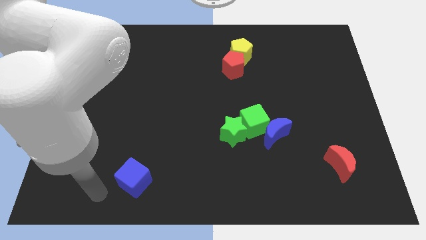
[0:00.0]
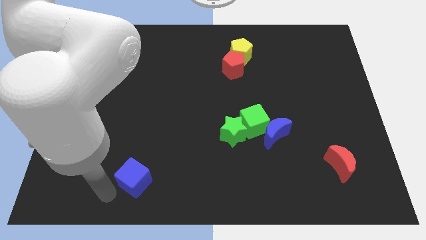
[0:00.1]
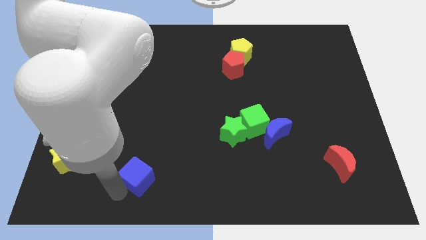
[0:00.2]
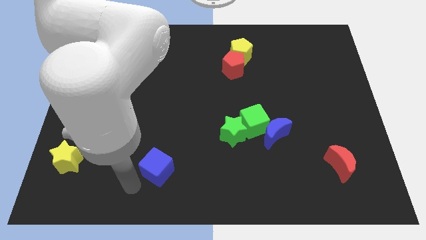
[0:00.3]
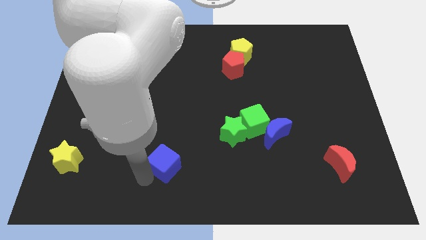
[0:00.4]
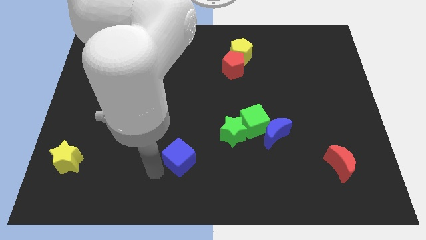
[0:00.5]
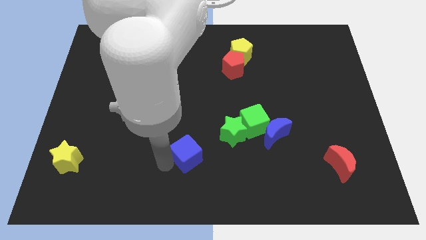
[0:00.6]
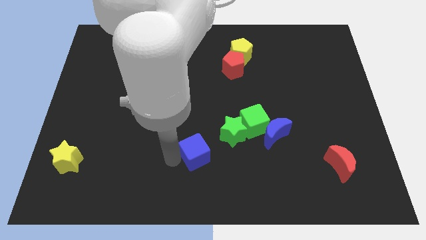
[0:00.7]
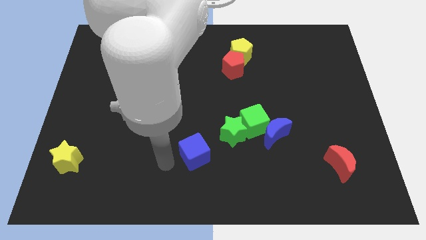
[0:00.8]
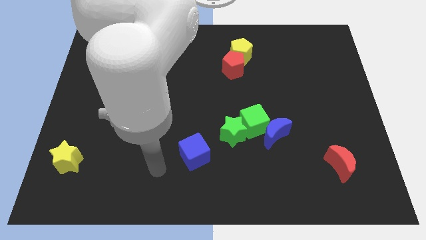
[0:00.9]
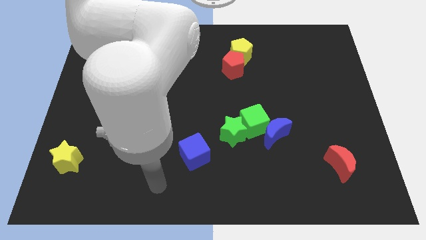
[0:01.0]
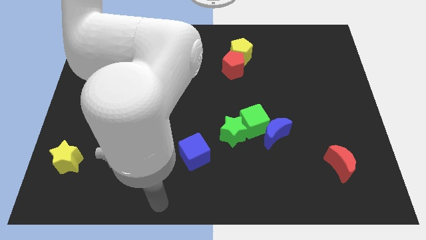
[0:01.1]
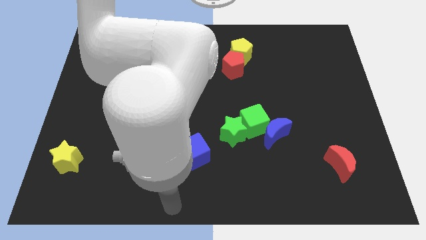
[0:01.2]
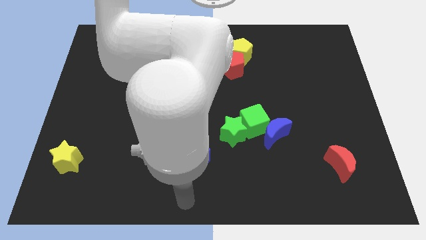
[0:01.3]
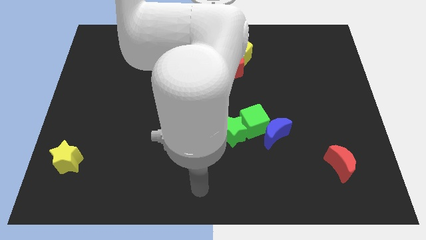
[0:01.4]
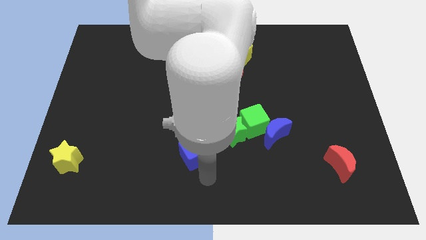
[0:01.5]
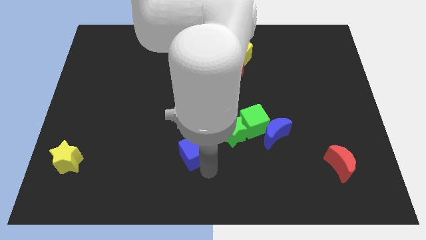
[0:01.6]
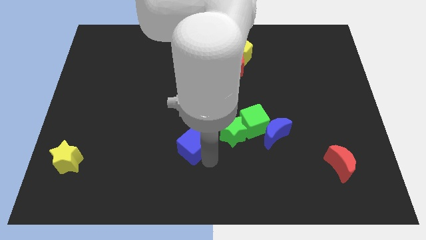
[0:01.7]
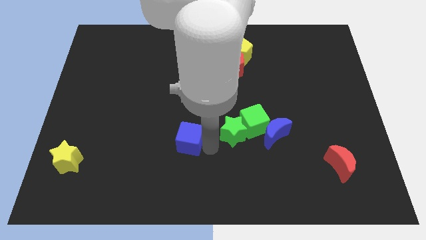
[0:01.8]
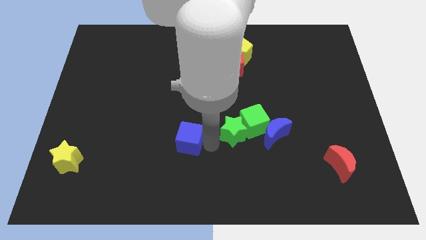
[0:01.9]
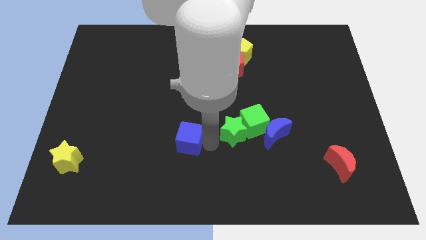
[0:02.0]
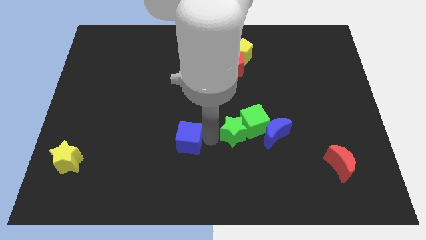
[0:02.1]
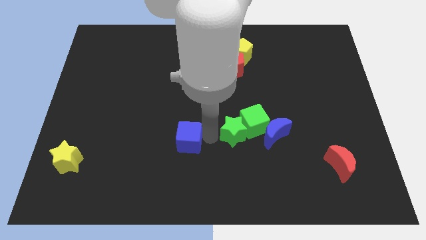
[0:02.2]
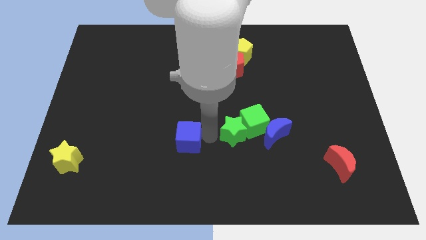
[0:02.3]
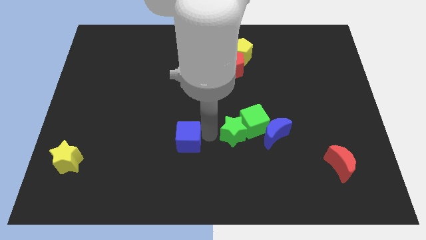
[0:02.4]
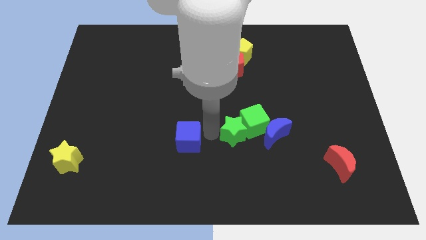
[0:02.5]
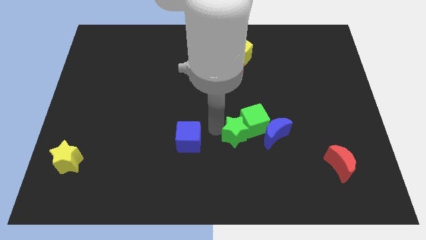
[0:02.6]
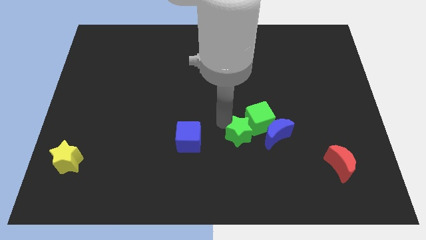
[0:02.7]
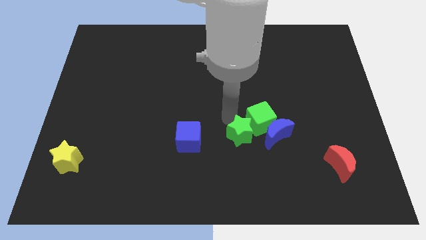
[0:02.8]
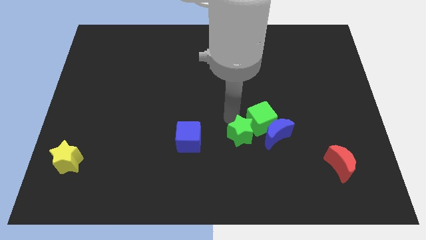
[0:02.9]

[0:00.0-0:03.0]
place the blue cube to the left of green star

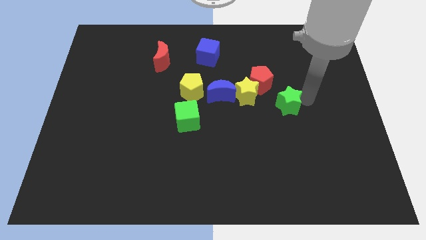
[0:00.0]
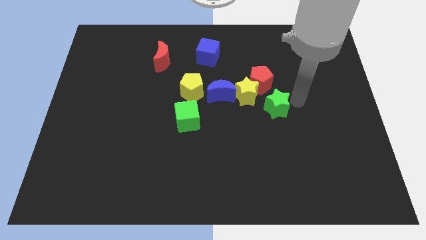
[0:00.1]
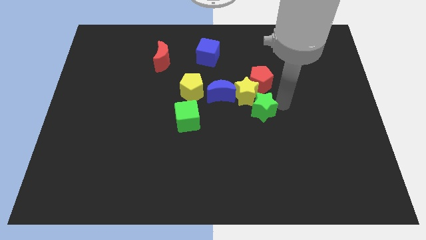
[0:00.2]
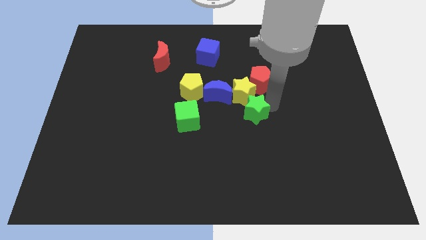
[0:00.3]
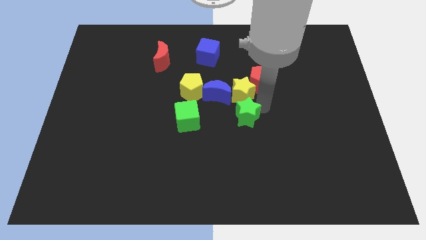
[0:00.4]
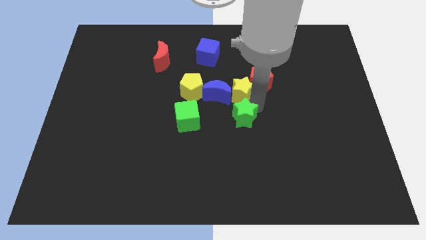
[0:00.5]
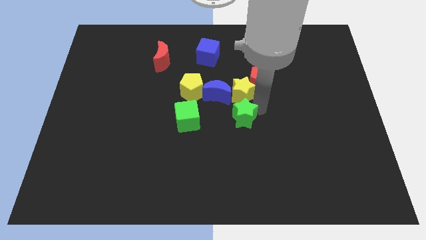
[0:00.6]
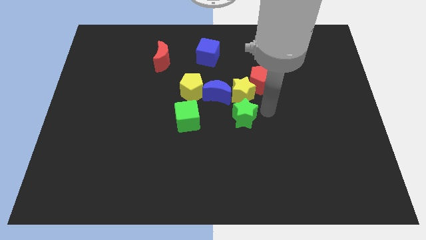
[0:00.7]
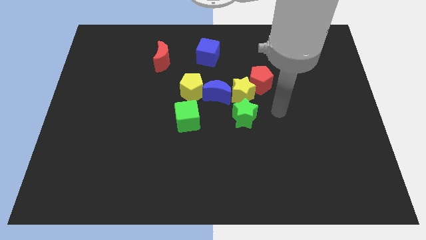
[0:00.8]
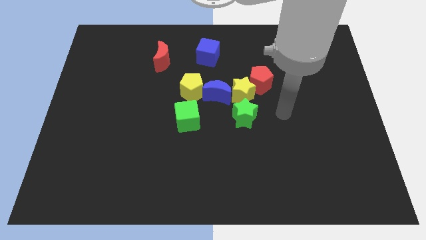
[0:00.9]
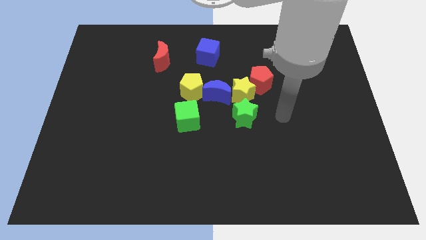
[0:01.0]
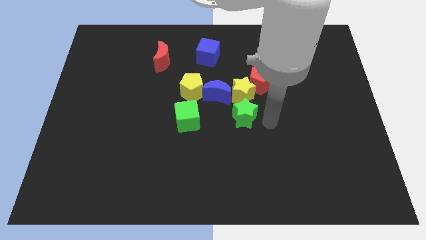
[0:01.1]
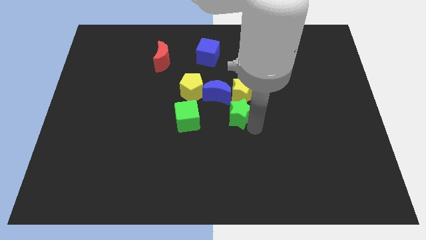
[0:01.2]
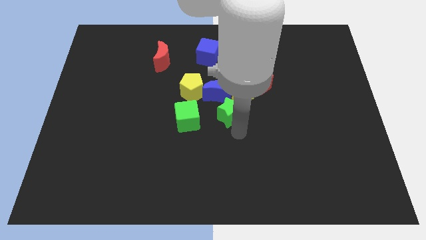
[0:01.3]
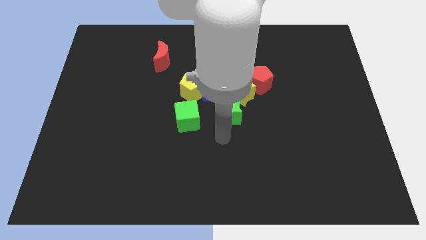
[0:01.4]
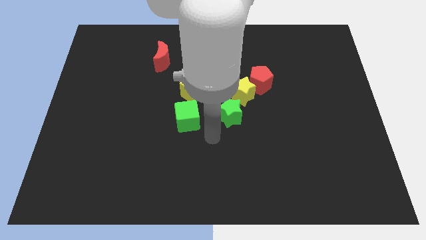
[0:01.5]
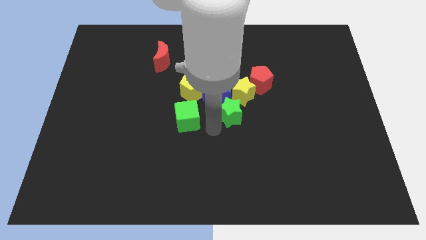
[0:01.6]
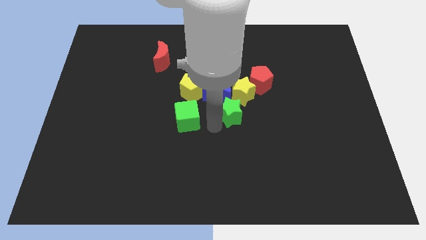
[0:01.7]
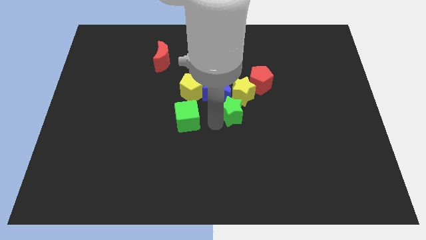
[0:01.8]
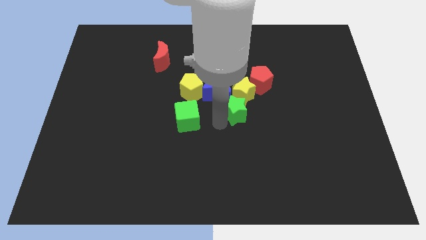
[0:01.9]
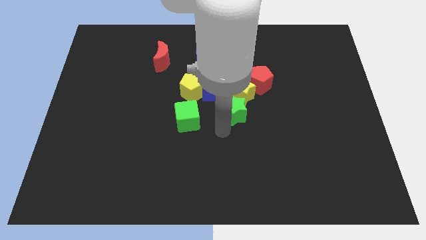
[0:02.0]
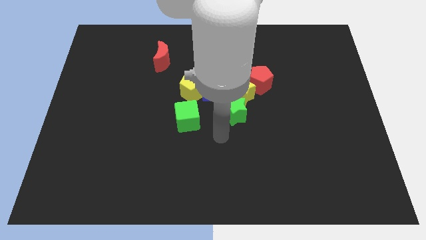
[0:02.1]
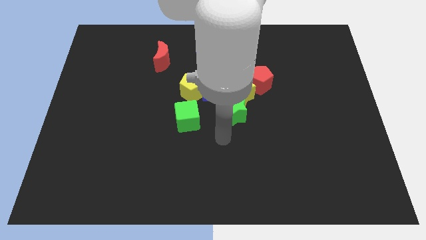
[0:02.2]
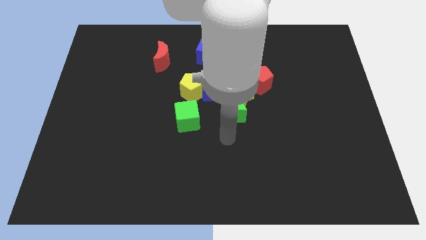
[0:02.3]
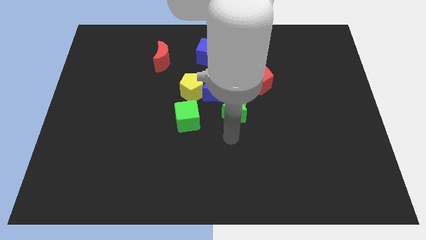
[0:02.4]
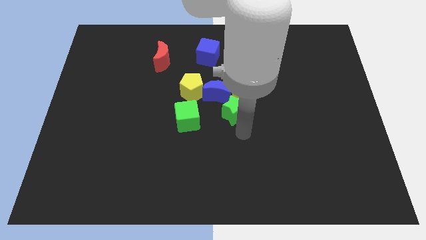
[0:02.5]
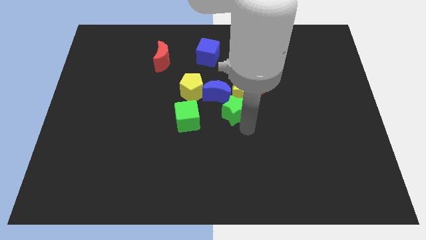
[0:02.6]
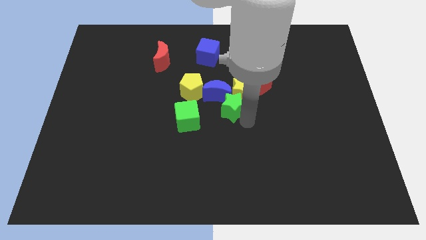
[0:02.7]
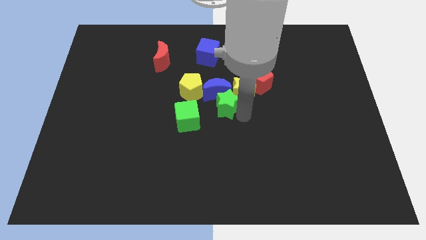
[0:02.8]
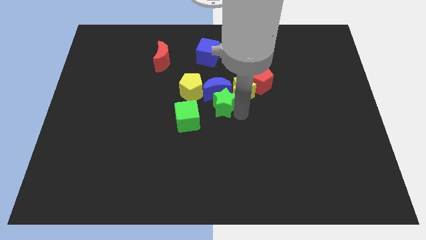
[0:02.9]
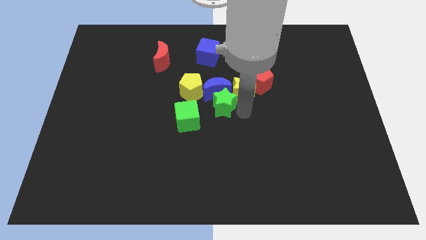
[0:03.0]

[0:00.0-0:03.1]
push green star into the blue moon

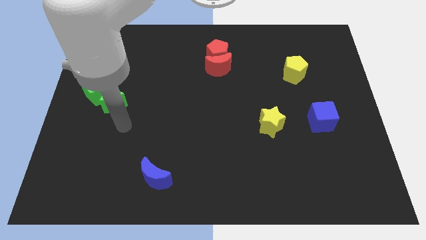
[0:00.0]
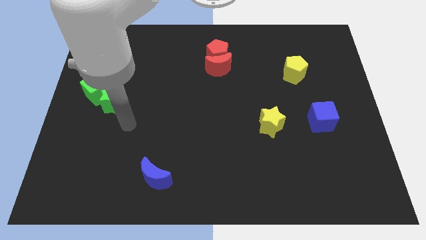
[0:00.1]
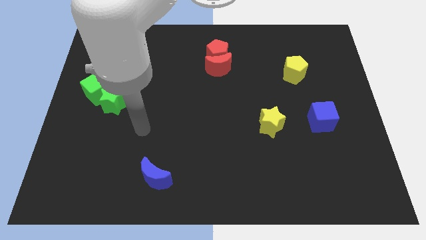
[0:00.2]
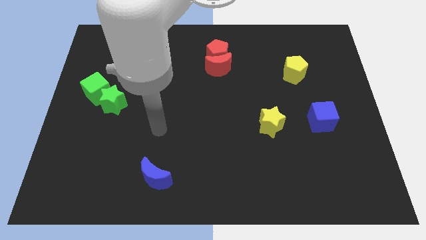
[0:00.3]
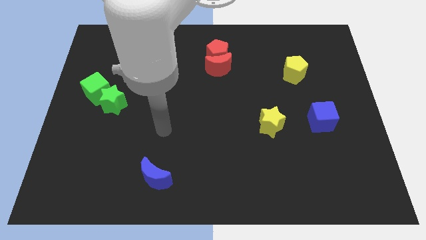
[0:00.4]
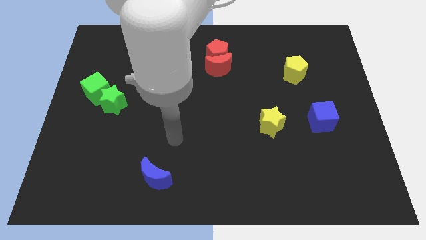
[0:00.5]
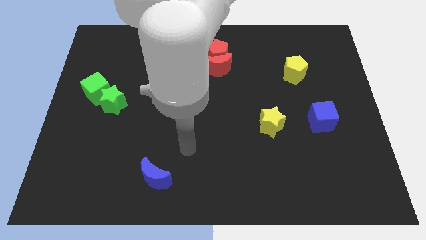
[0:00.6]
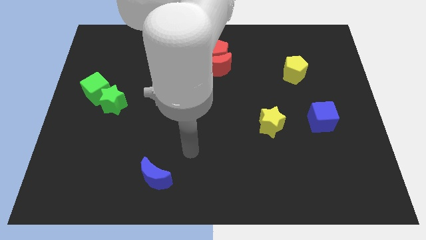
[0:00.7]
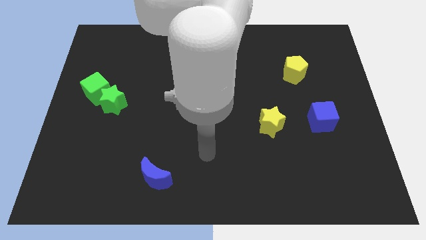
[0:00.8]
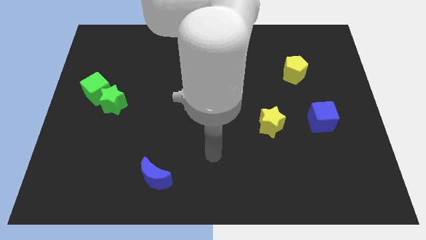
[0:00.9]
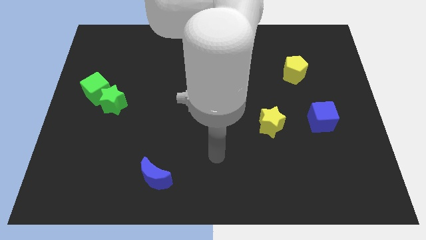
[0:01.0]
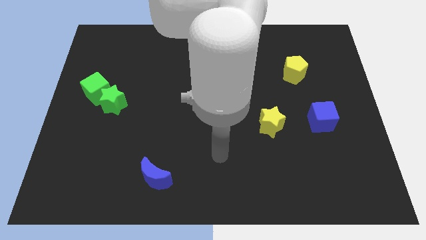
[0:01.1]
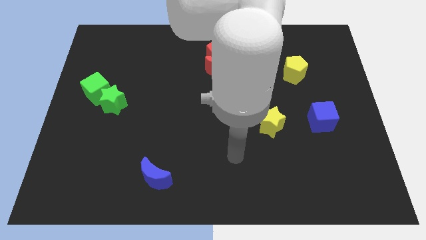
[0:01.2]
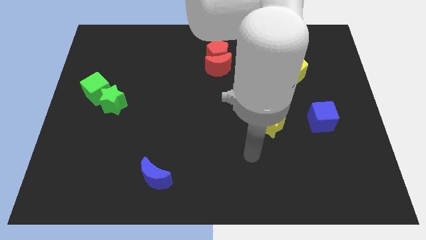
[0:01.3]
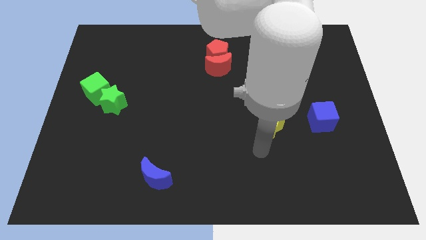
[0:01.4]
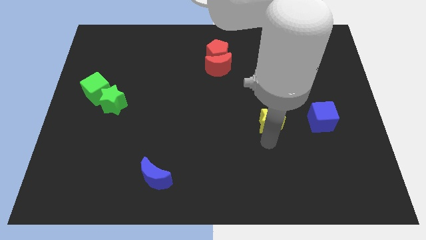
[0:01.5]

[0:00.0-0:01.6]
move your arm towards the bottom of the yellow star

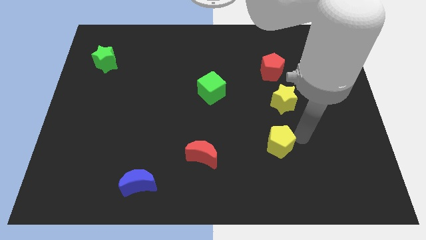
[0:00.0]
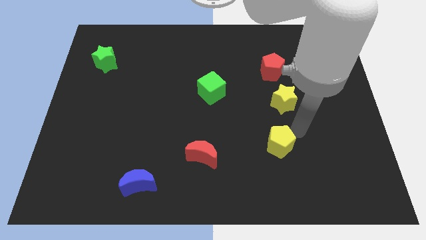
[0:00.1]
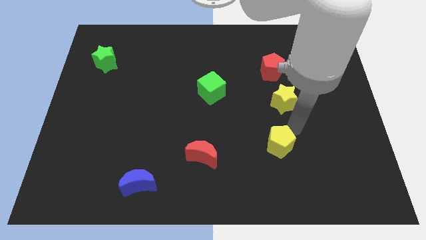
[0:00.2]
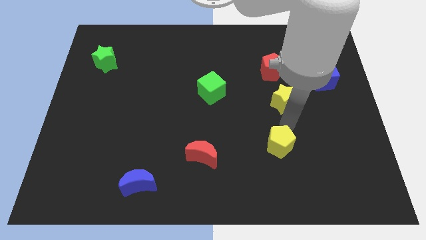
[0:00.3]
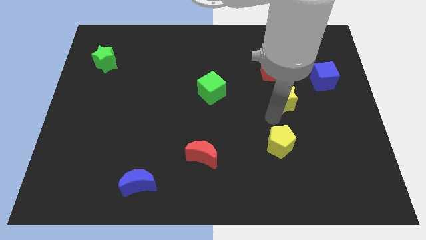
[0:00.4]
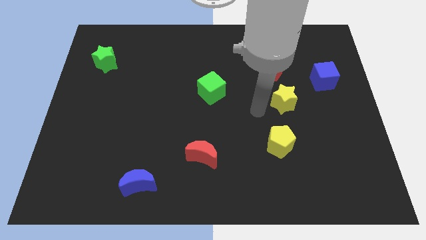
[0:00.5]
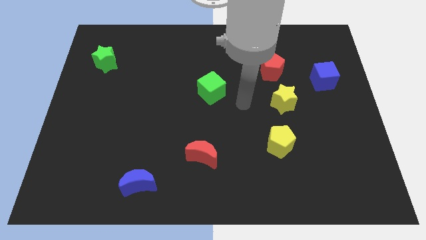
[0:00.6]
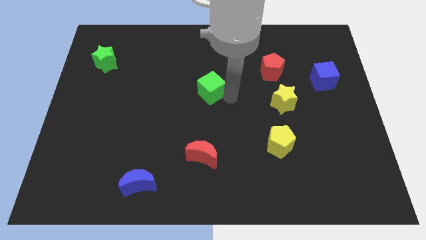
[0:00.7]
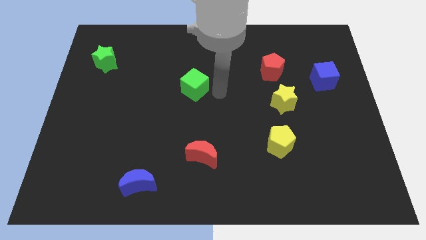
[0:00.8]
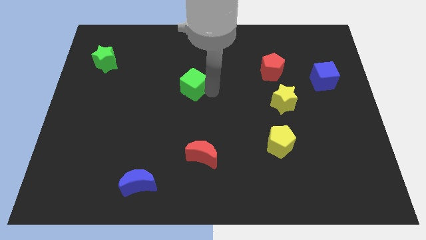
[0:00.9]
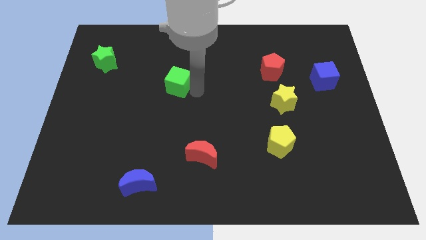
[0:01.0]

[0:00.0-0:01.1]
push the green cube slightly to the left

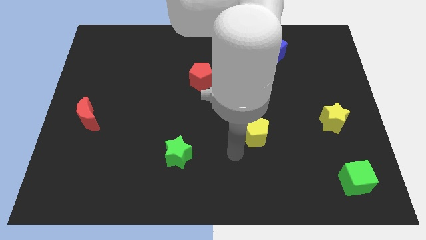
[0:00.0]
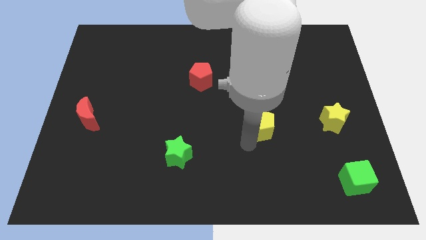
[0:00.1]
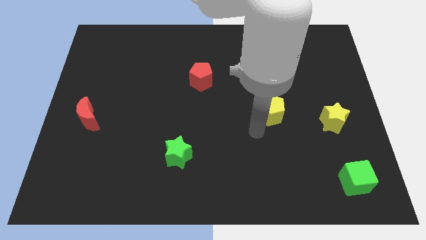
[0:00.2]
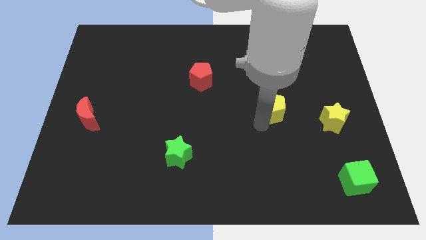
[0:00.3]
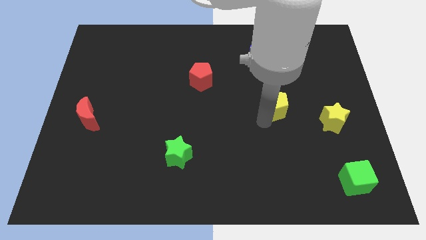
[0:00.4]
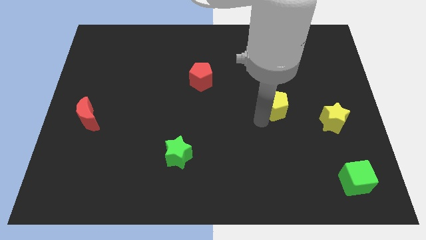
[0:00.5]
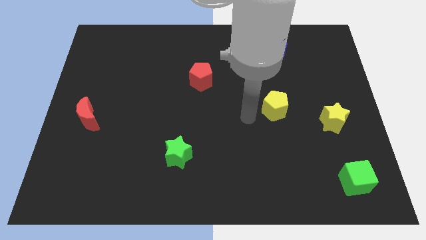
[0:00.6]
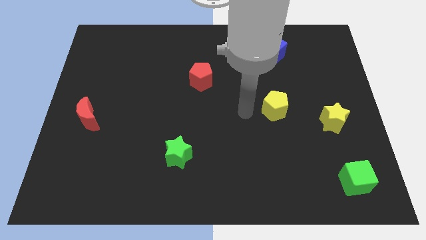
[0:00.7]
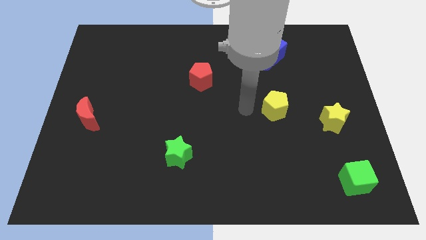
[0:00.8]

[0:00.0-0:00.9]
push the yellow pentagon towards the left side of the yellow star
